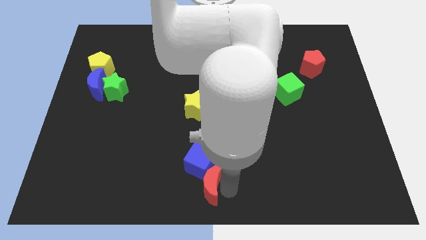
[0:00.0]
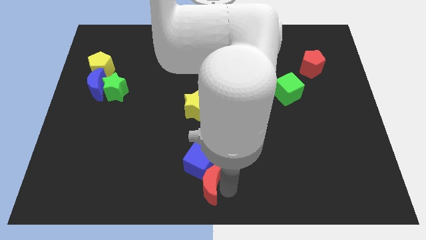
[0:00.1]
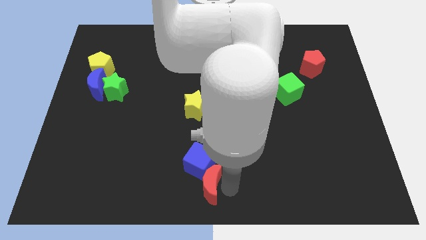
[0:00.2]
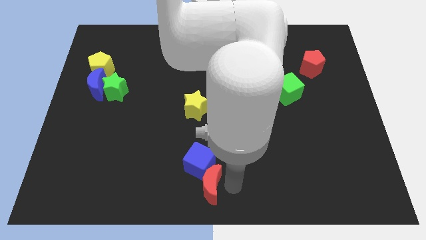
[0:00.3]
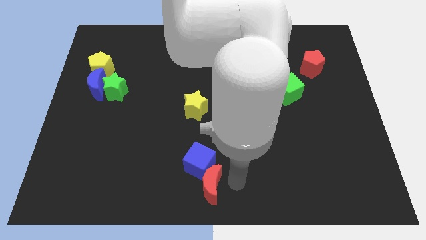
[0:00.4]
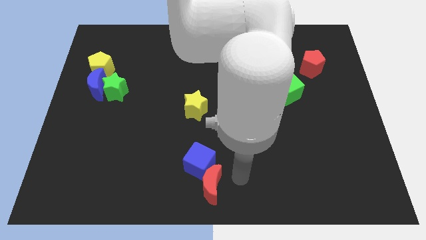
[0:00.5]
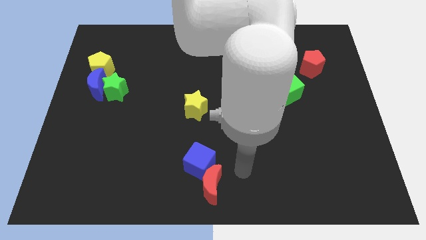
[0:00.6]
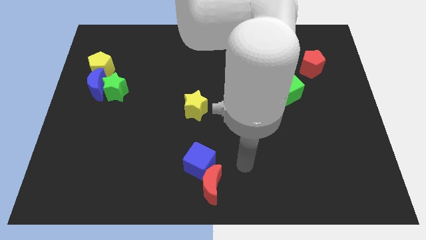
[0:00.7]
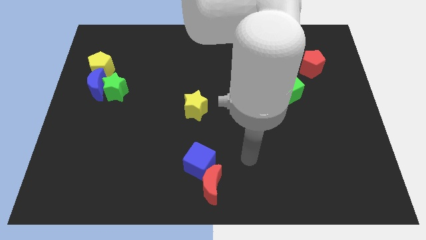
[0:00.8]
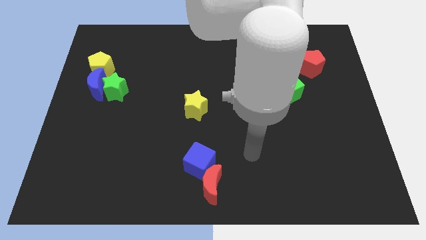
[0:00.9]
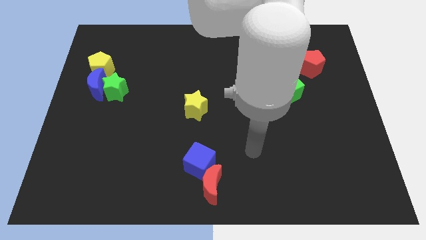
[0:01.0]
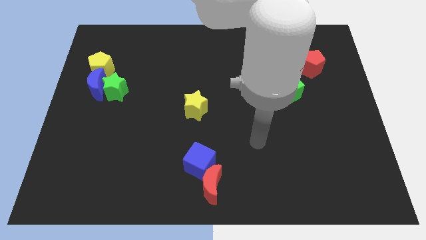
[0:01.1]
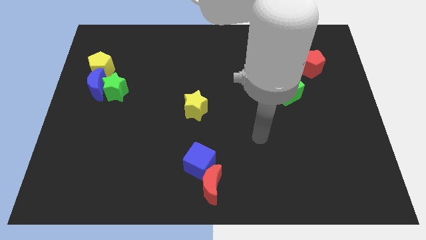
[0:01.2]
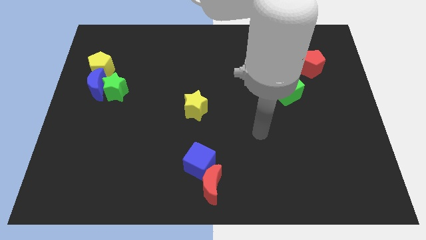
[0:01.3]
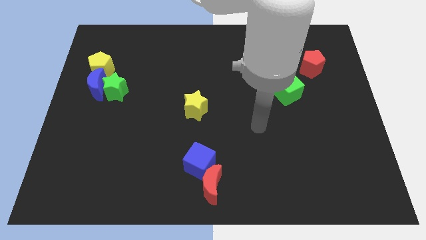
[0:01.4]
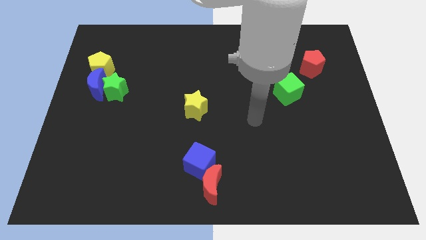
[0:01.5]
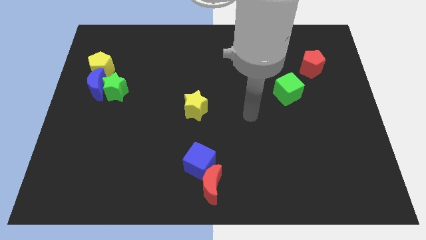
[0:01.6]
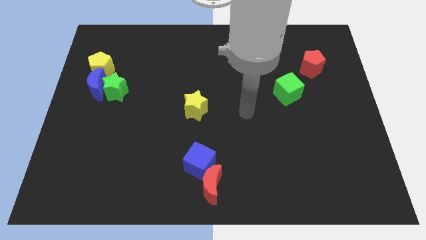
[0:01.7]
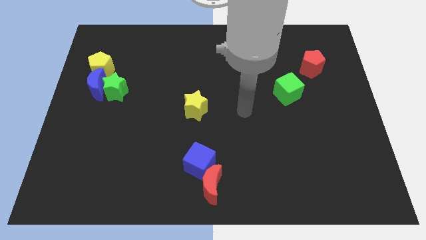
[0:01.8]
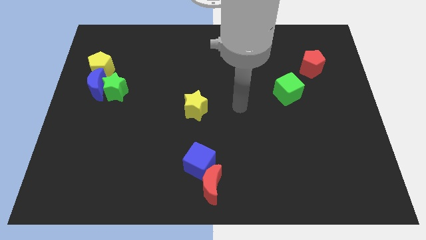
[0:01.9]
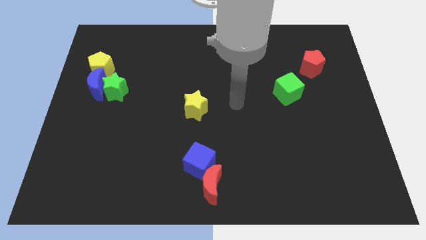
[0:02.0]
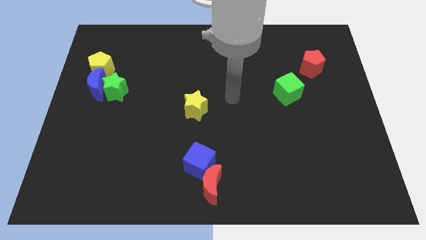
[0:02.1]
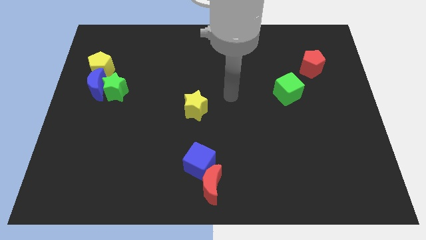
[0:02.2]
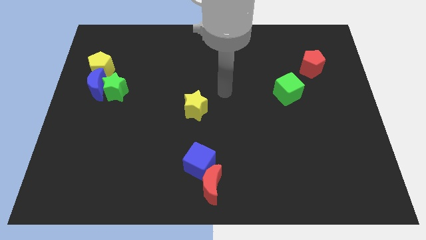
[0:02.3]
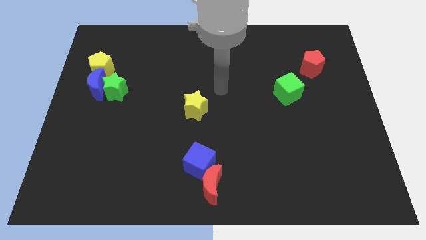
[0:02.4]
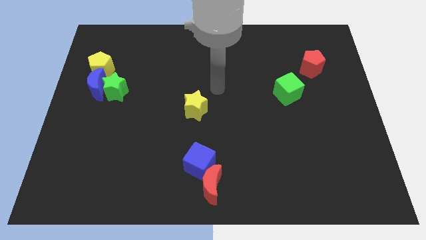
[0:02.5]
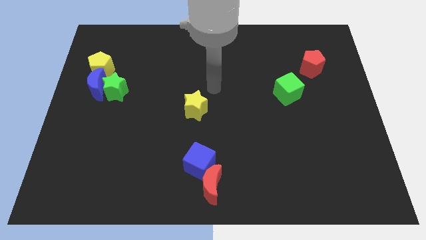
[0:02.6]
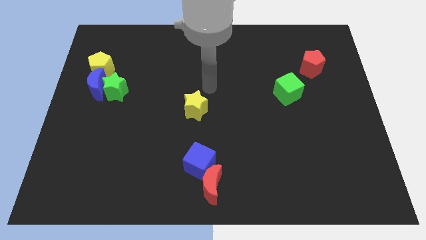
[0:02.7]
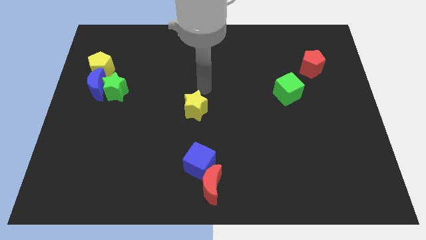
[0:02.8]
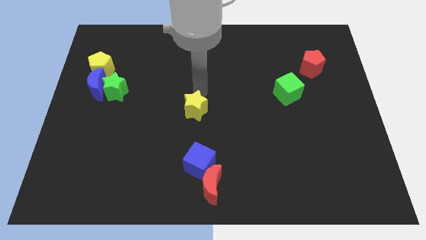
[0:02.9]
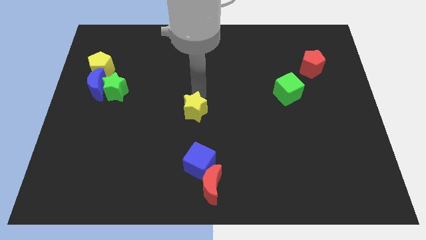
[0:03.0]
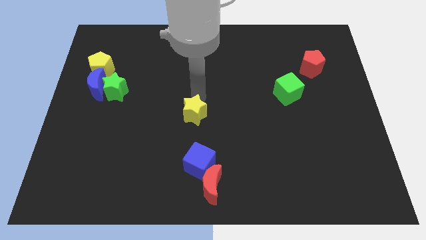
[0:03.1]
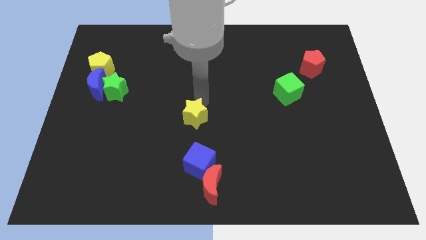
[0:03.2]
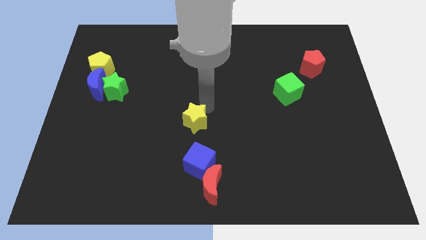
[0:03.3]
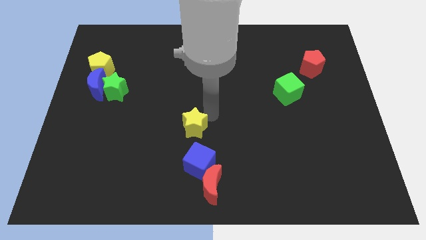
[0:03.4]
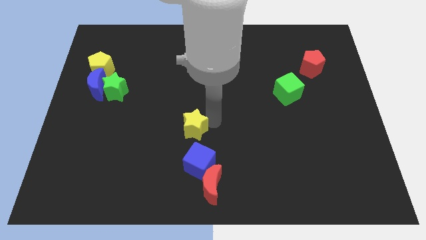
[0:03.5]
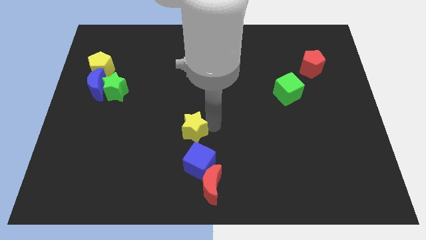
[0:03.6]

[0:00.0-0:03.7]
move the yellow star into the blue cube

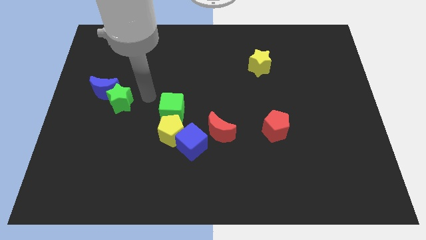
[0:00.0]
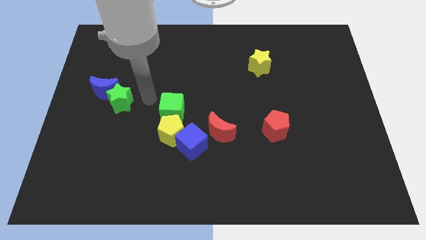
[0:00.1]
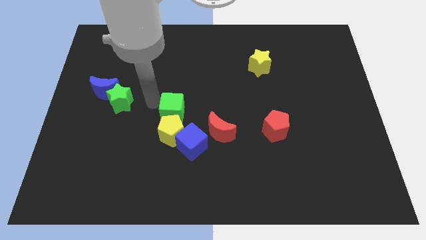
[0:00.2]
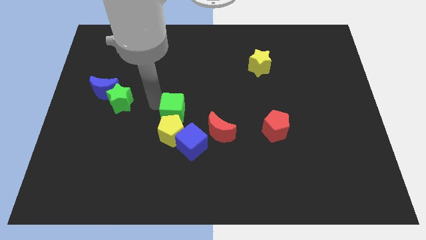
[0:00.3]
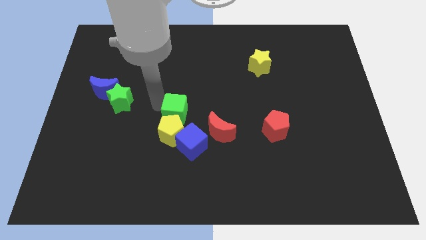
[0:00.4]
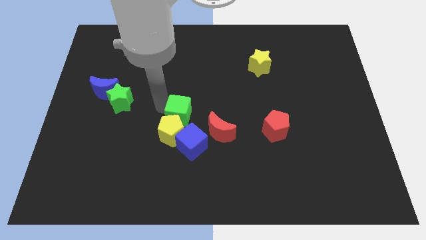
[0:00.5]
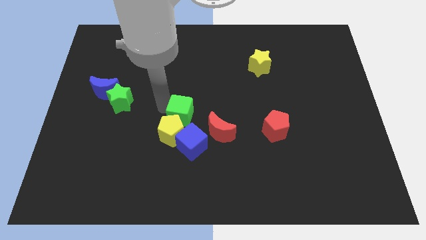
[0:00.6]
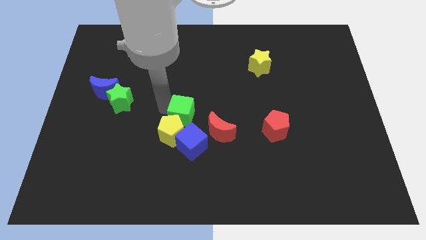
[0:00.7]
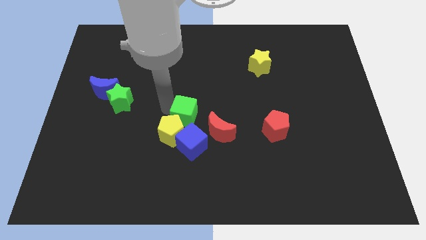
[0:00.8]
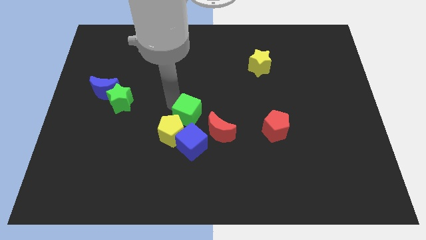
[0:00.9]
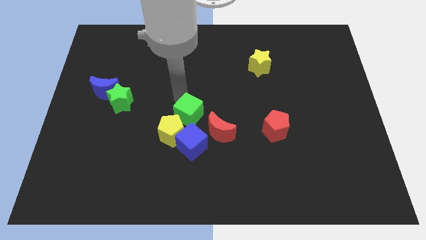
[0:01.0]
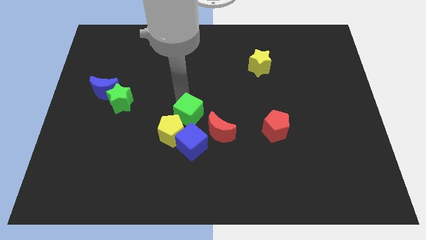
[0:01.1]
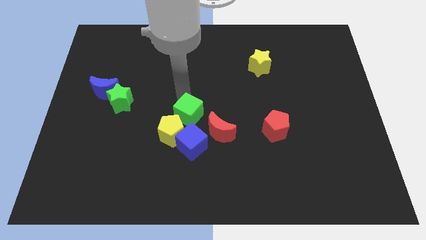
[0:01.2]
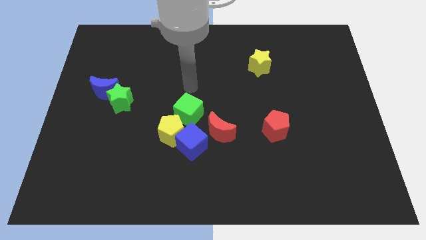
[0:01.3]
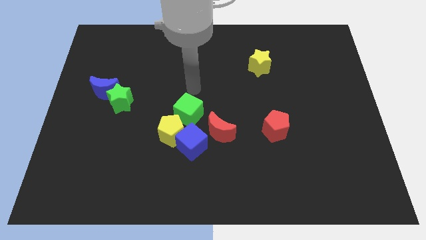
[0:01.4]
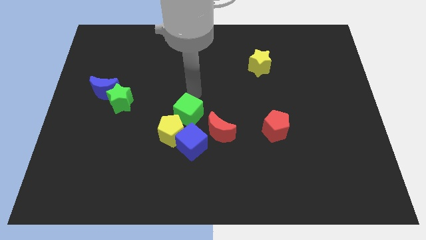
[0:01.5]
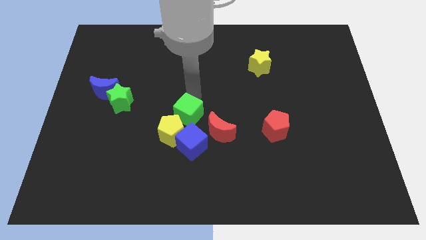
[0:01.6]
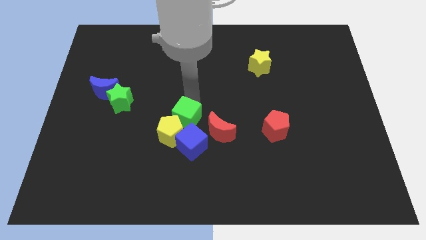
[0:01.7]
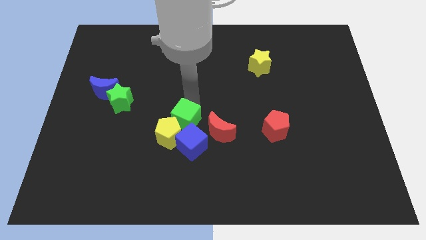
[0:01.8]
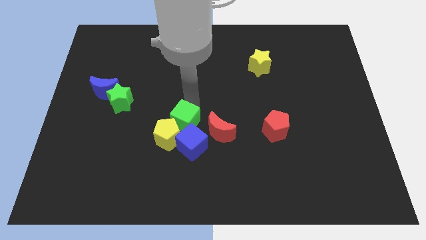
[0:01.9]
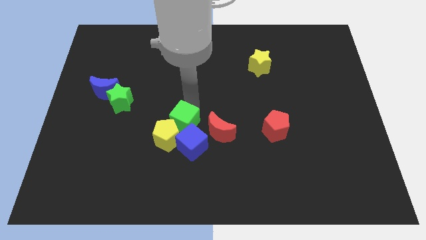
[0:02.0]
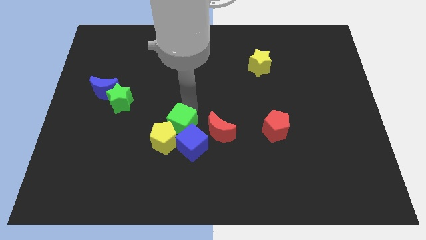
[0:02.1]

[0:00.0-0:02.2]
push the green cube to the top of the blue cube

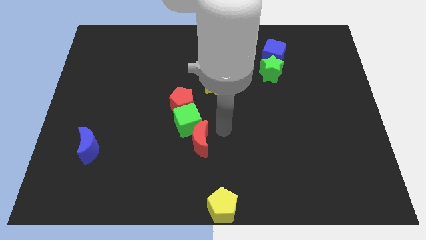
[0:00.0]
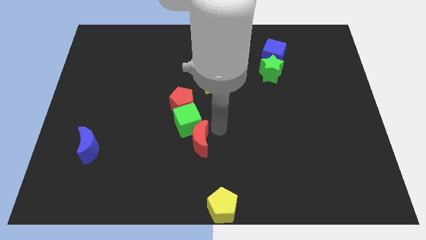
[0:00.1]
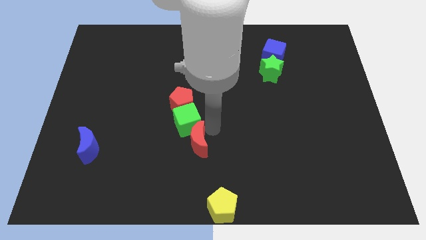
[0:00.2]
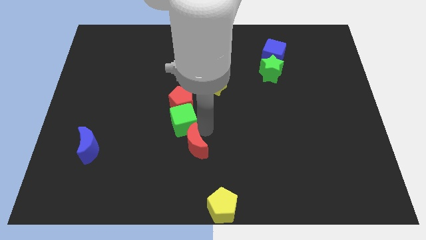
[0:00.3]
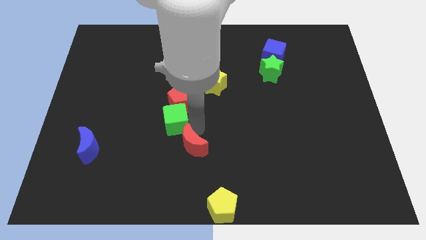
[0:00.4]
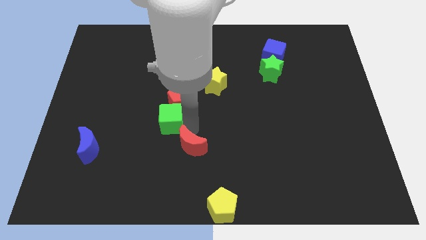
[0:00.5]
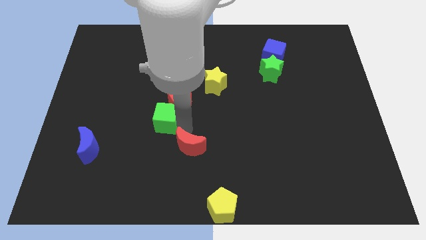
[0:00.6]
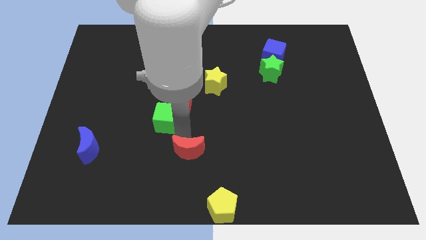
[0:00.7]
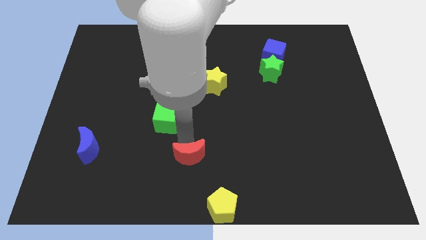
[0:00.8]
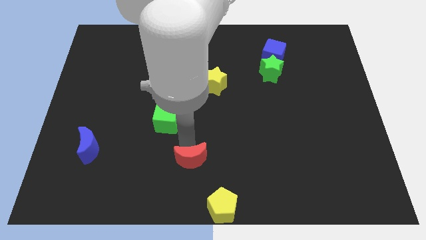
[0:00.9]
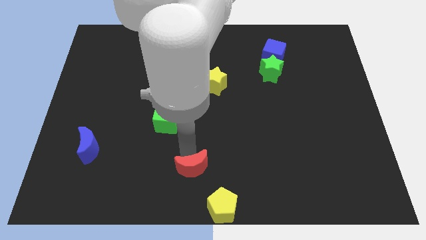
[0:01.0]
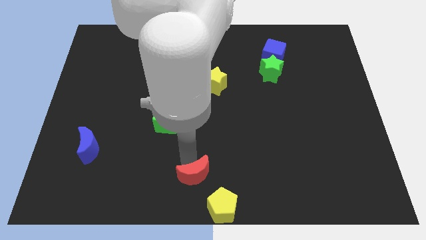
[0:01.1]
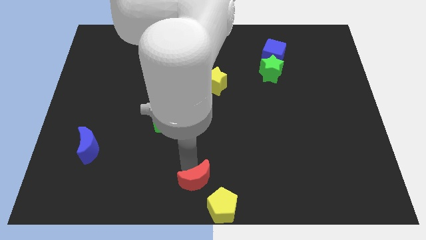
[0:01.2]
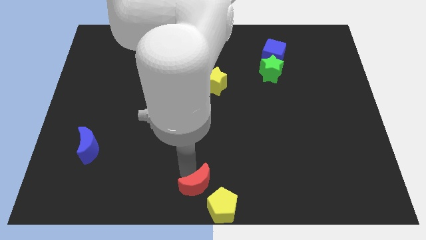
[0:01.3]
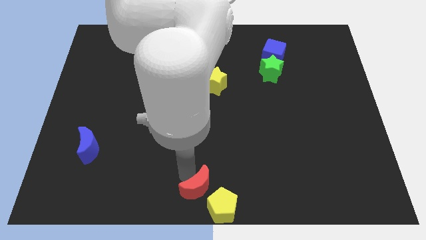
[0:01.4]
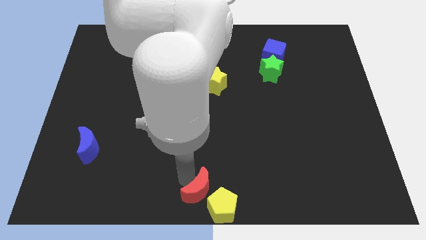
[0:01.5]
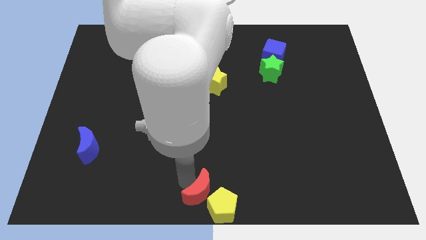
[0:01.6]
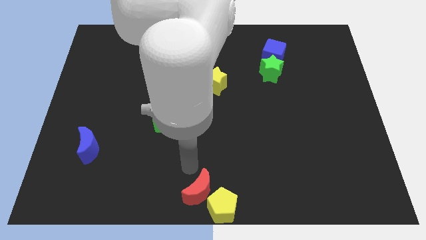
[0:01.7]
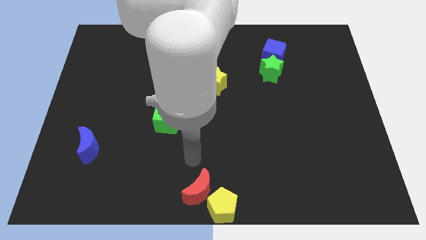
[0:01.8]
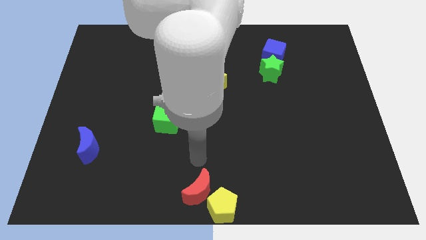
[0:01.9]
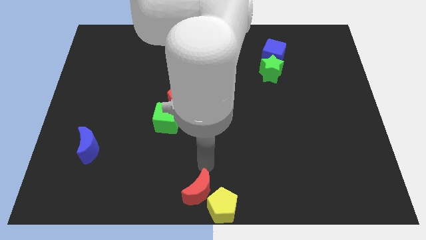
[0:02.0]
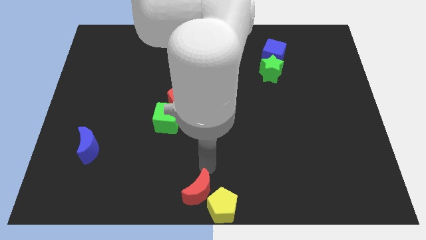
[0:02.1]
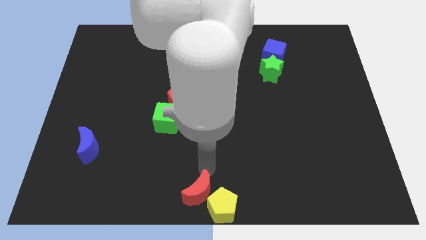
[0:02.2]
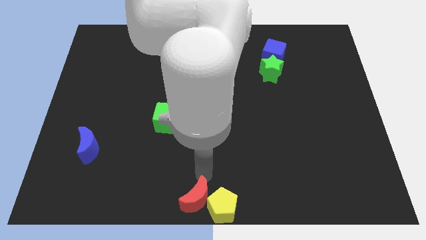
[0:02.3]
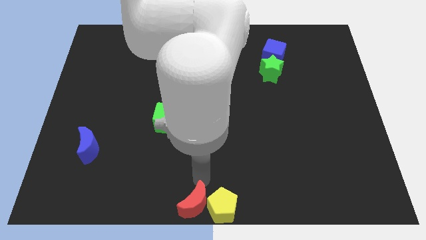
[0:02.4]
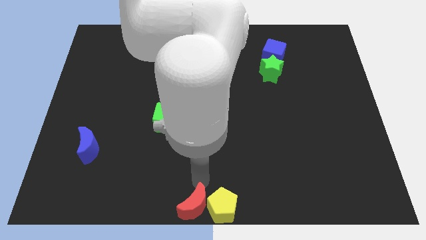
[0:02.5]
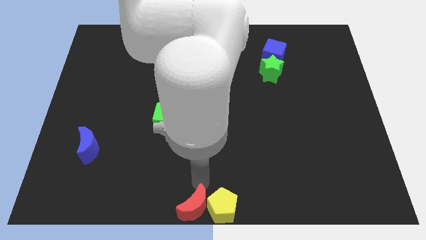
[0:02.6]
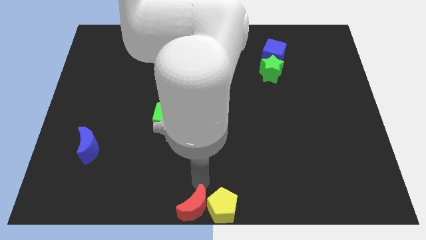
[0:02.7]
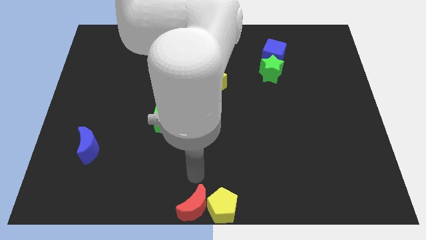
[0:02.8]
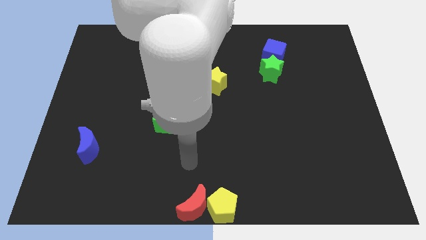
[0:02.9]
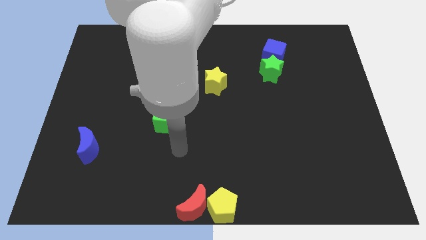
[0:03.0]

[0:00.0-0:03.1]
move red moon to bottom center
